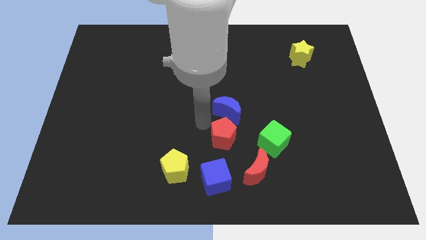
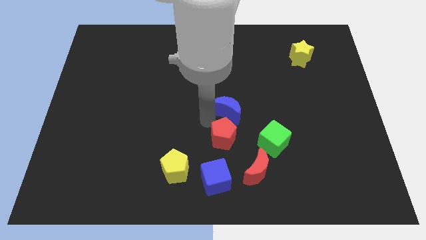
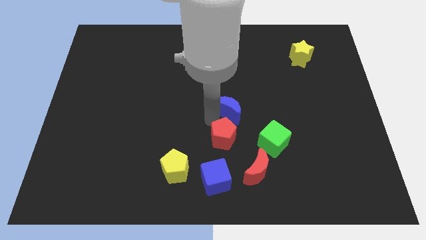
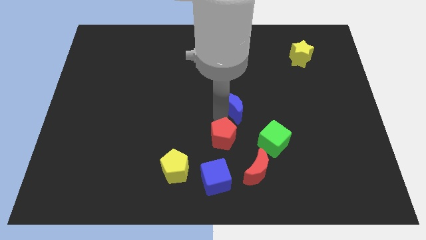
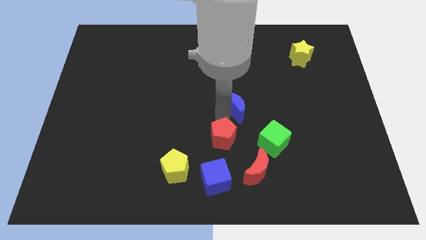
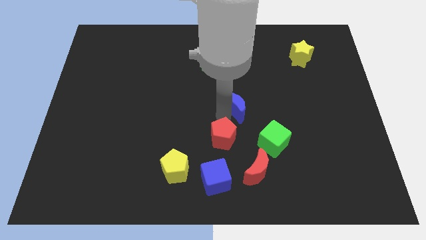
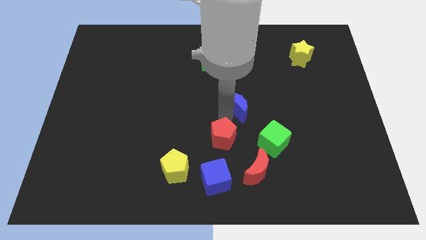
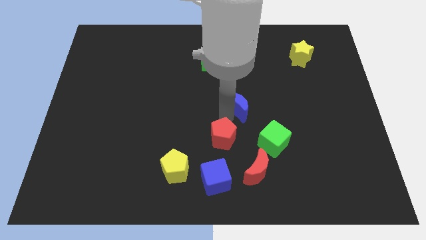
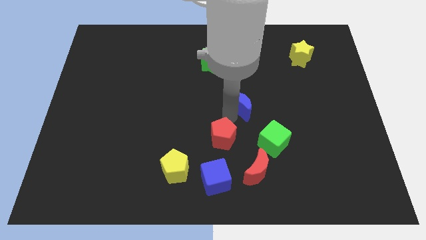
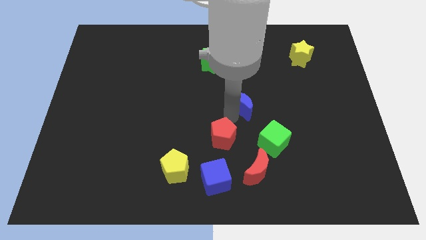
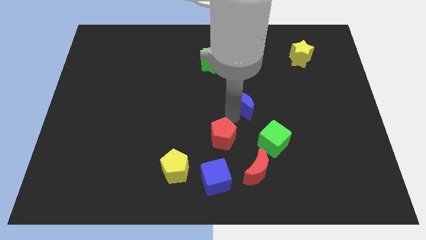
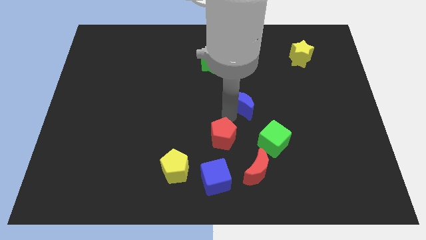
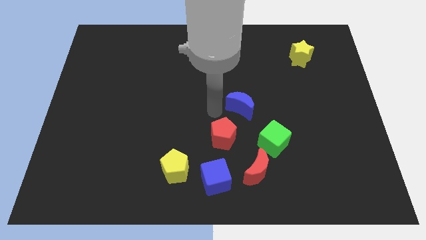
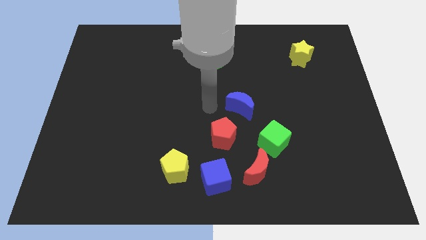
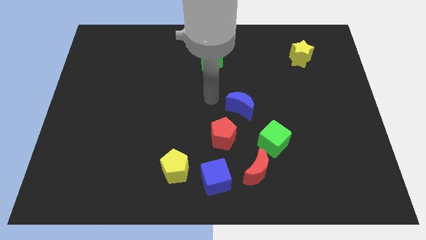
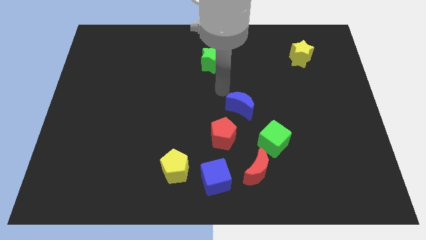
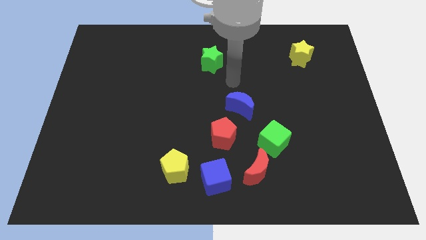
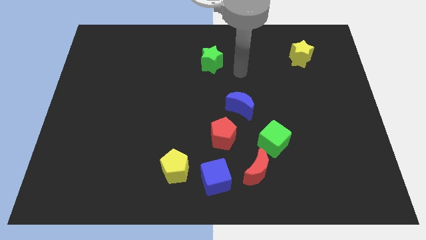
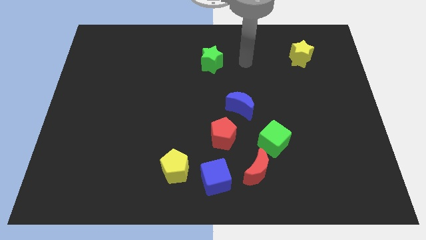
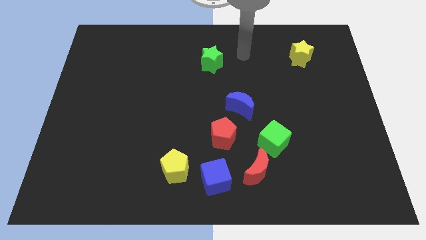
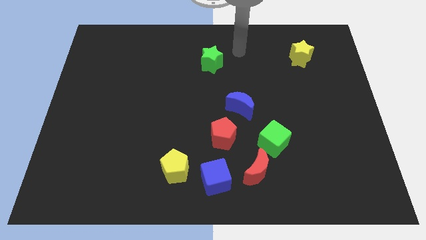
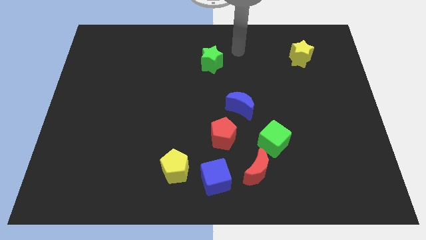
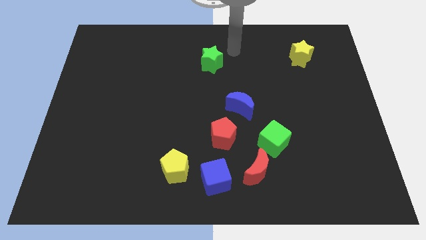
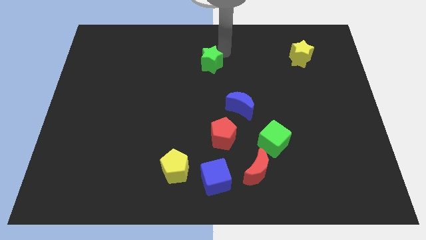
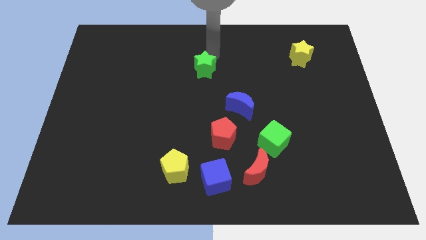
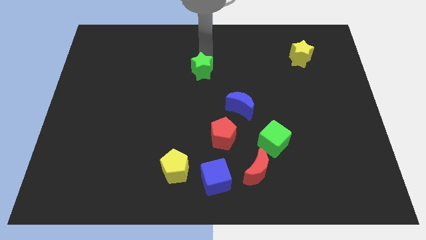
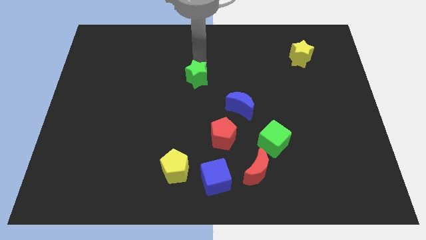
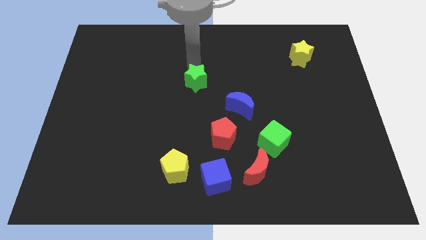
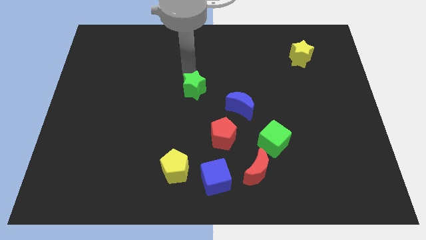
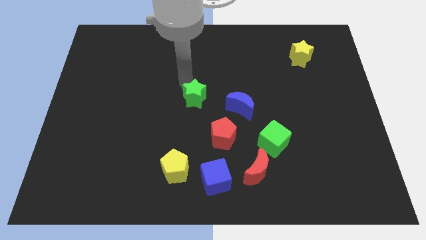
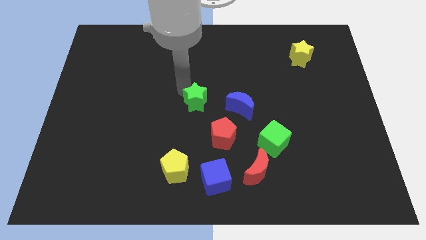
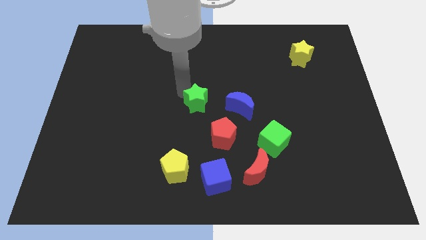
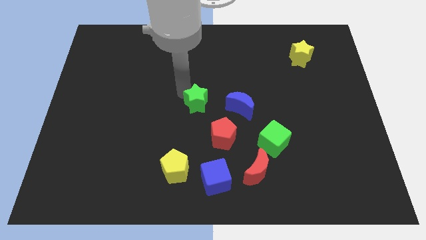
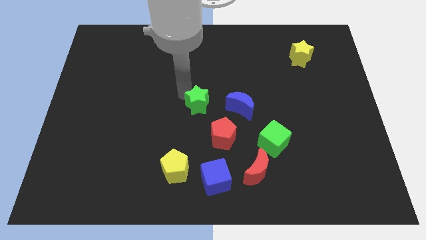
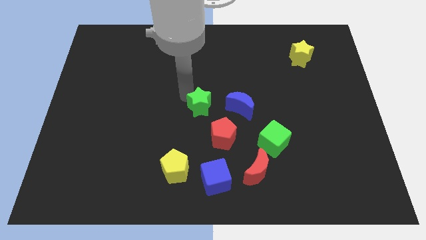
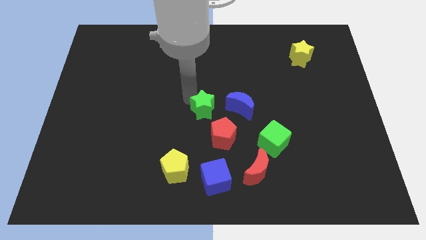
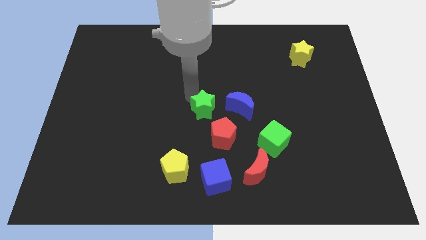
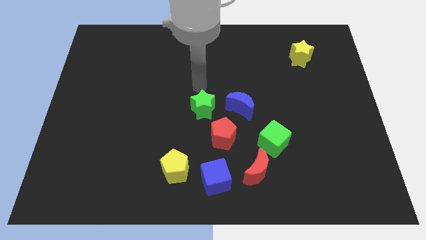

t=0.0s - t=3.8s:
put the green star and the blue crescent in a line horizontally

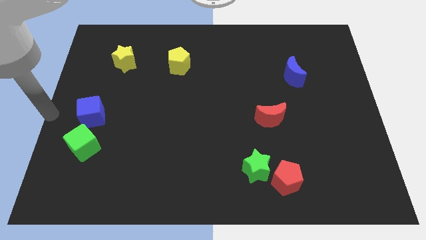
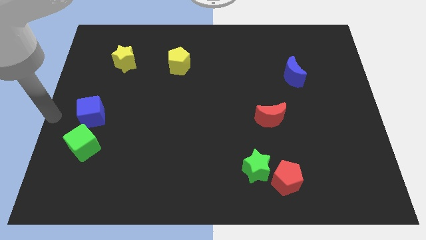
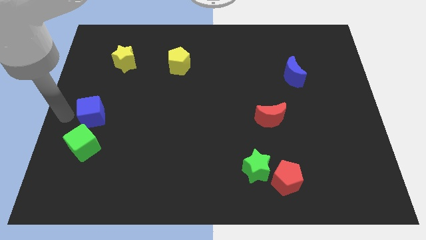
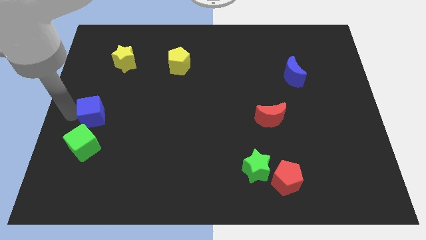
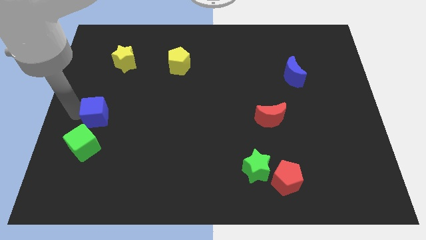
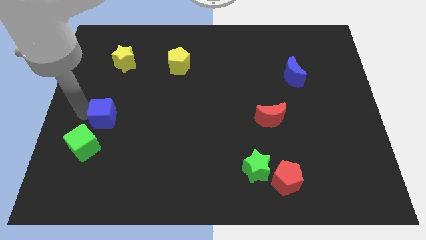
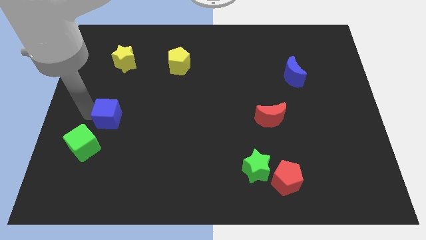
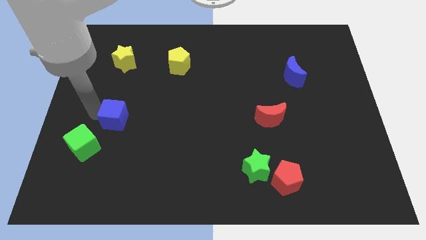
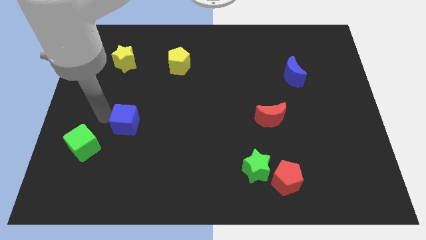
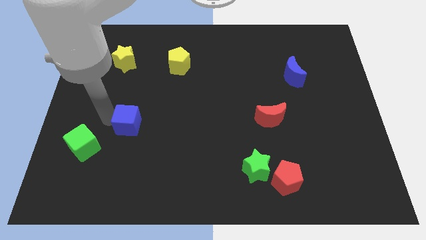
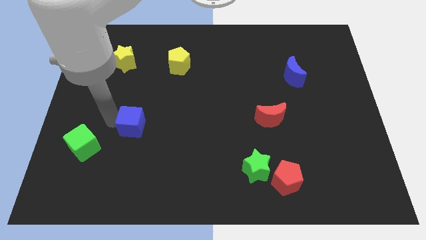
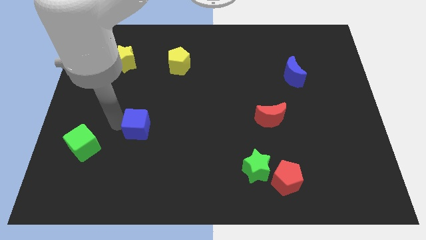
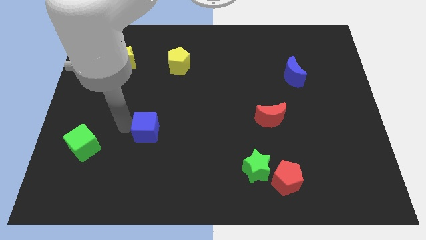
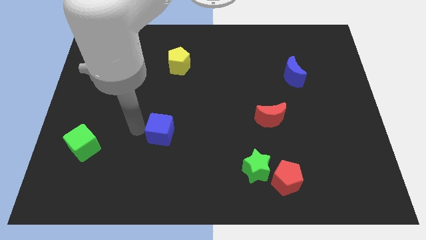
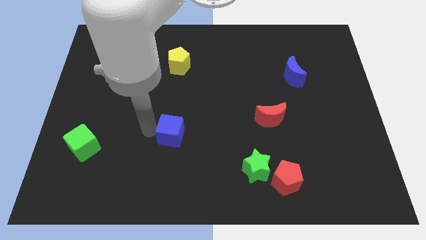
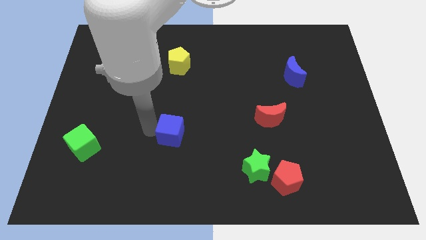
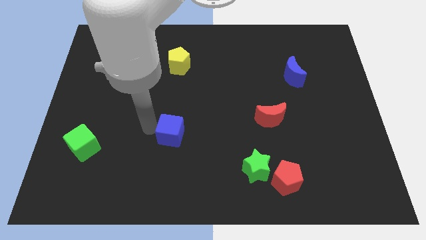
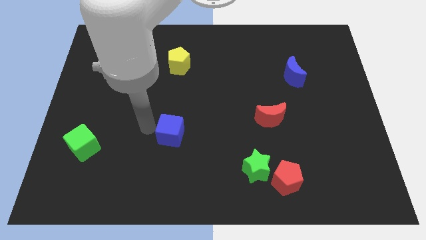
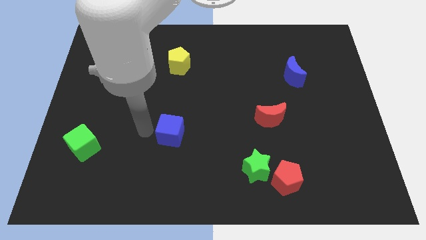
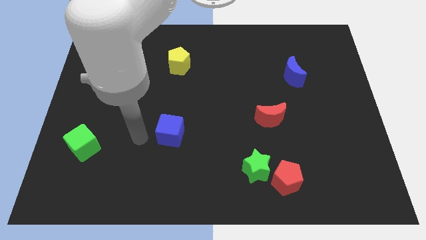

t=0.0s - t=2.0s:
push the blue cube towards the center

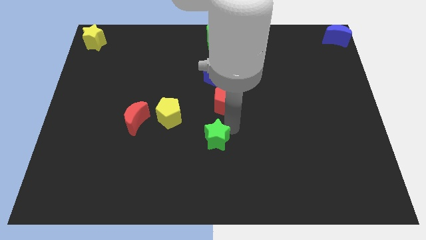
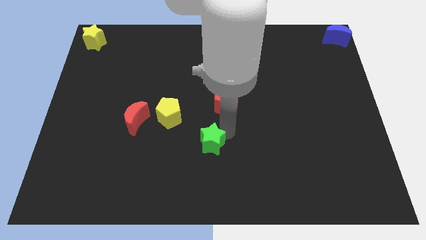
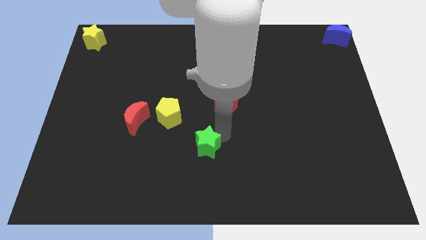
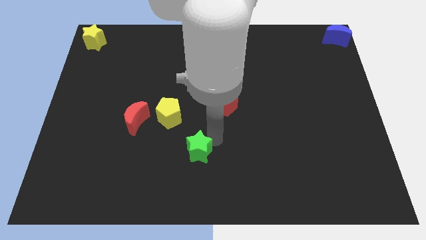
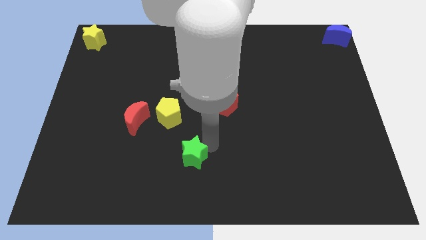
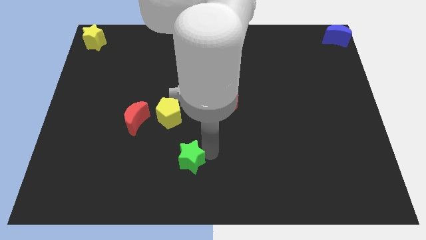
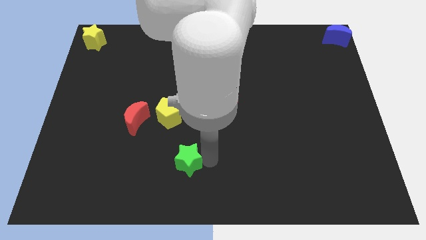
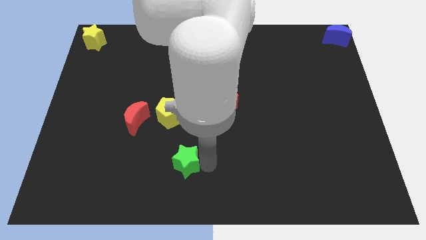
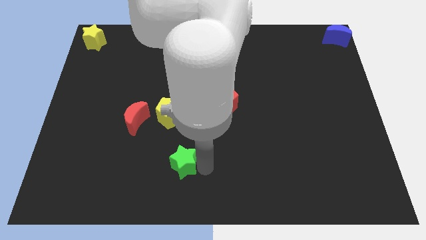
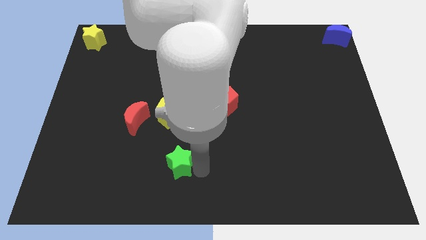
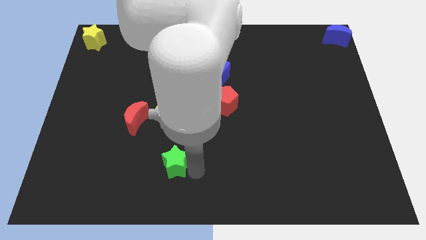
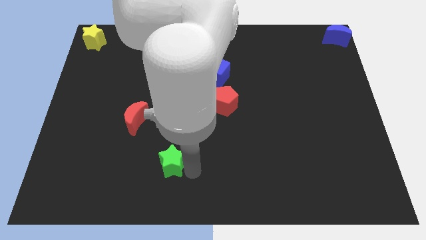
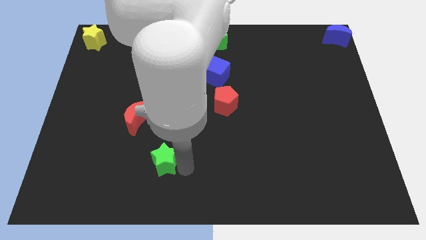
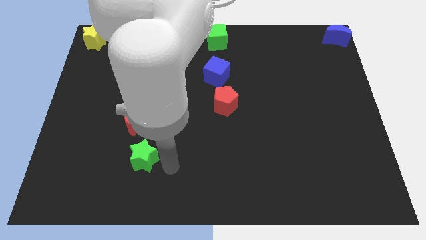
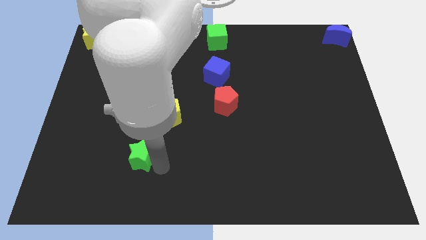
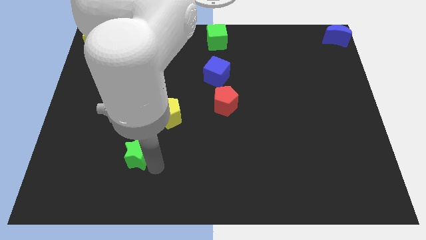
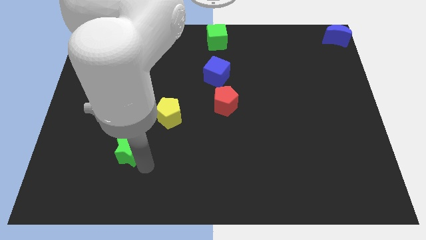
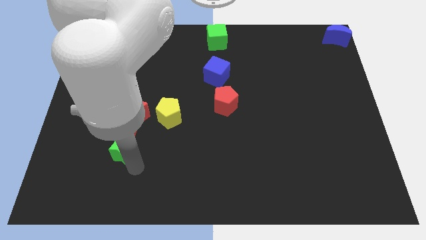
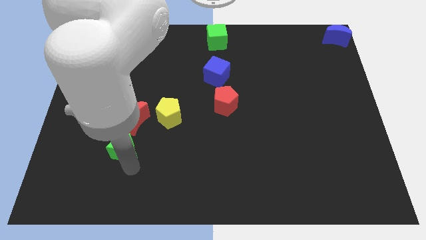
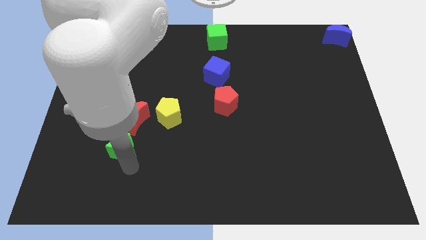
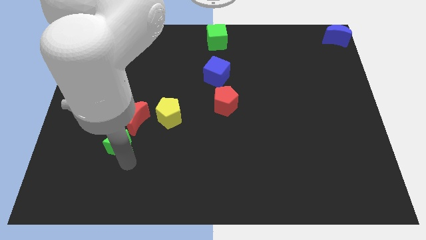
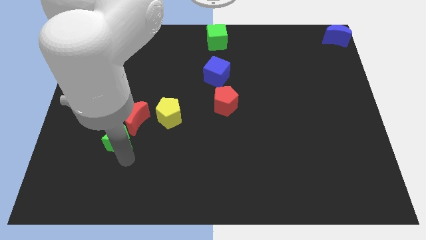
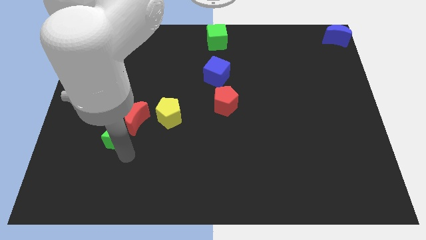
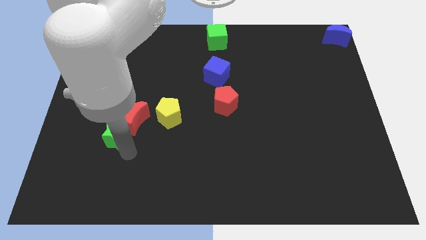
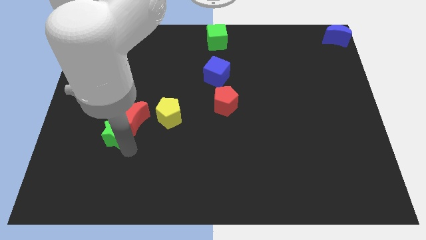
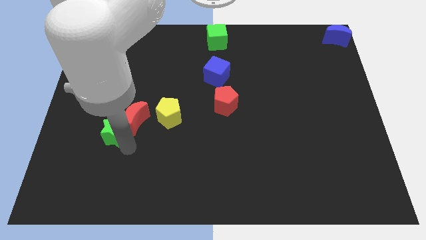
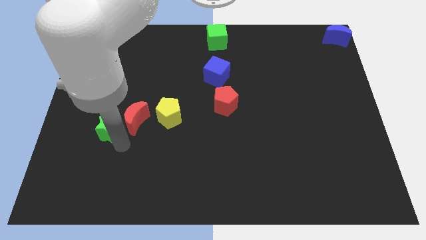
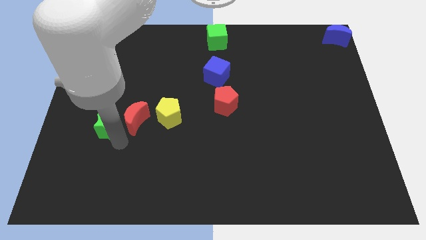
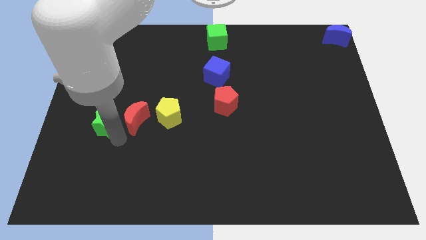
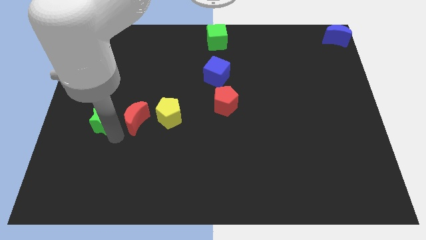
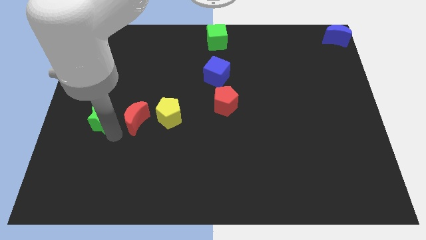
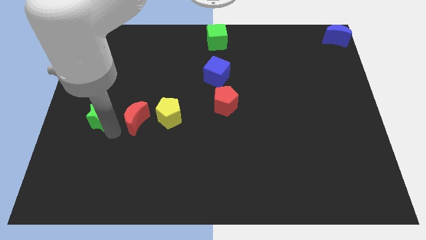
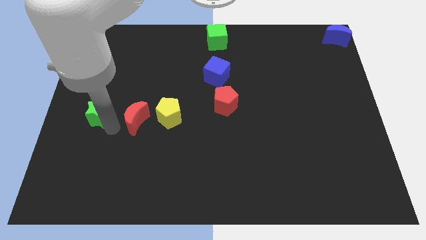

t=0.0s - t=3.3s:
place the green star left to the red moon
